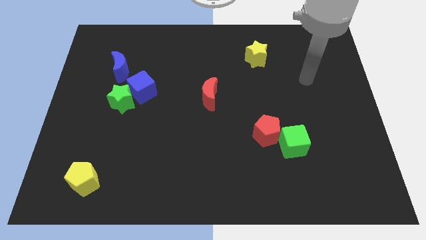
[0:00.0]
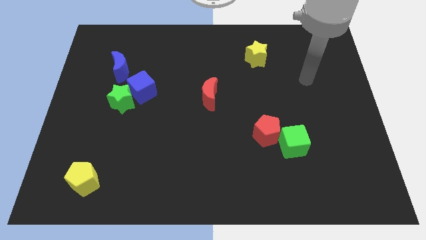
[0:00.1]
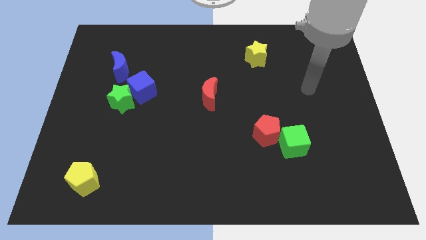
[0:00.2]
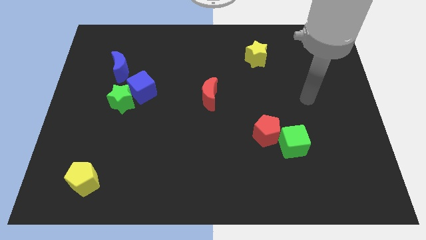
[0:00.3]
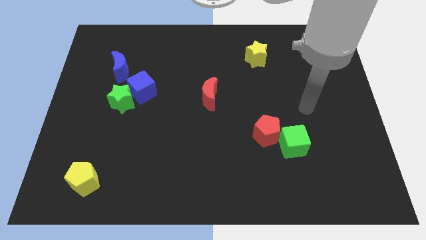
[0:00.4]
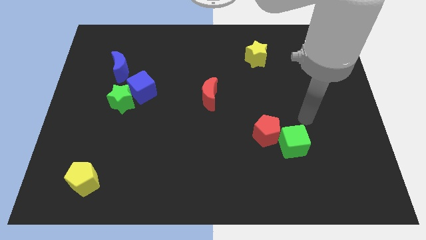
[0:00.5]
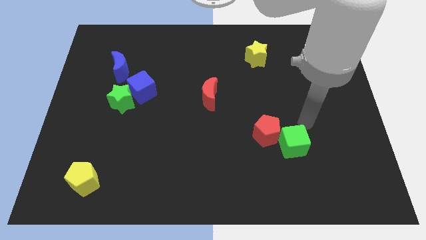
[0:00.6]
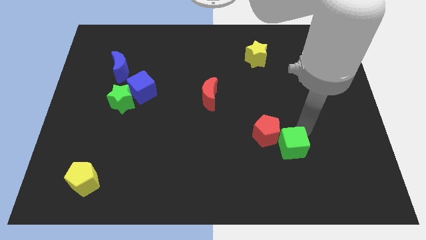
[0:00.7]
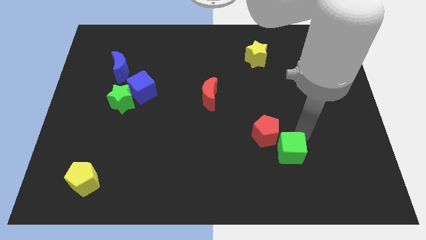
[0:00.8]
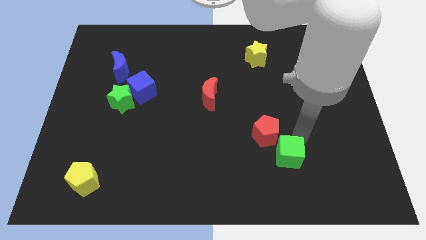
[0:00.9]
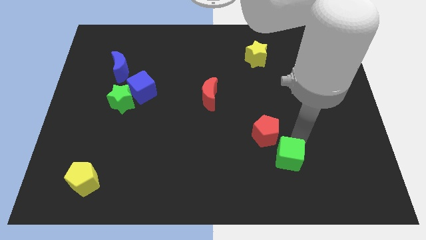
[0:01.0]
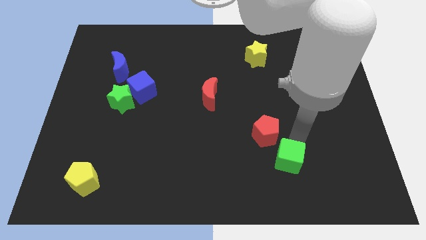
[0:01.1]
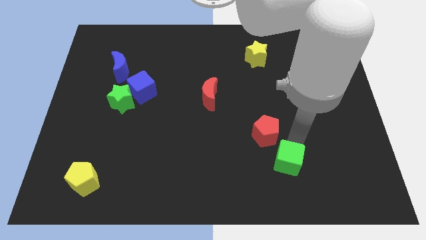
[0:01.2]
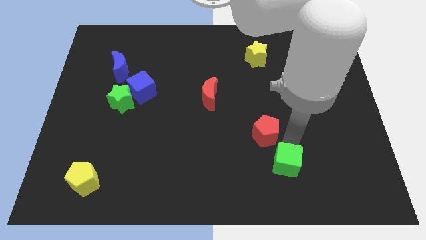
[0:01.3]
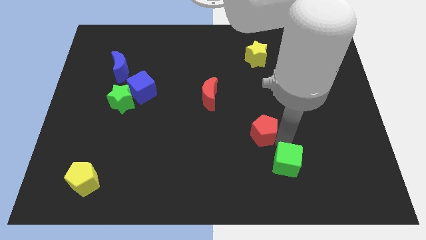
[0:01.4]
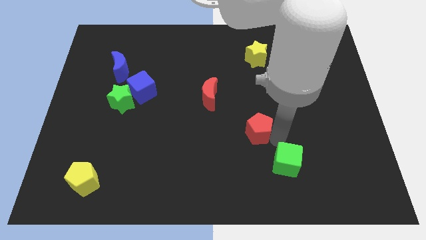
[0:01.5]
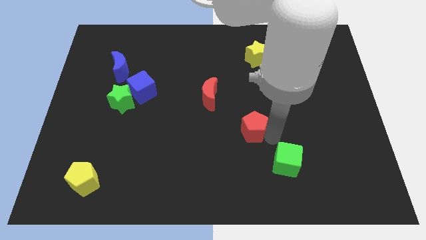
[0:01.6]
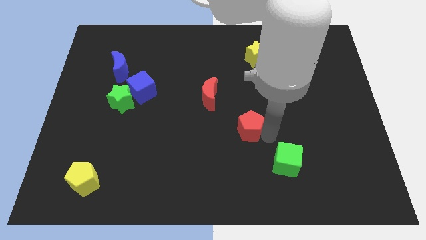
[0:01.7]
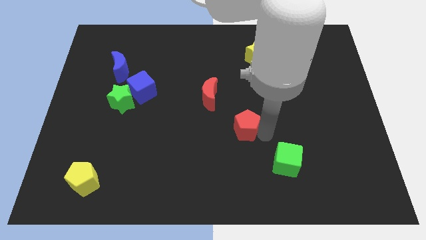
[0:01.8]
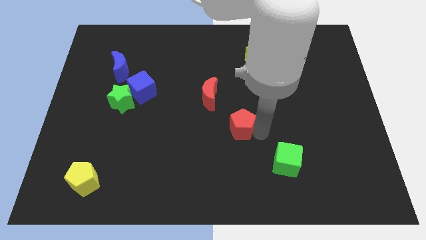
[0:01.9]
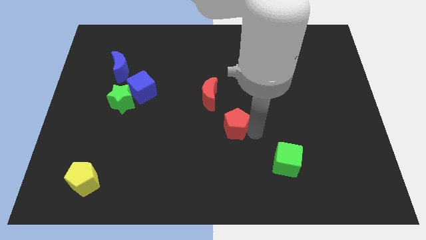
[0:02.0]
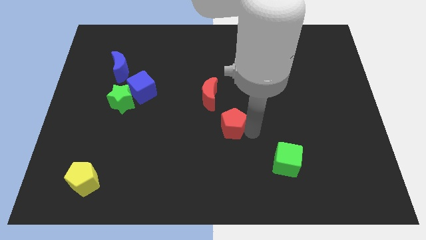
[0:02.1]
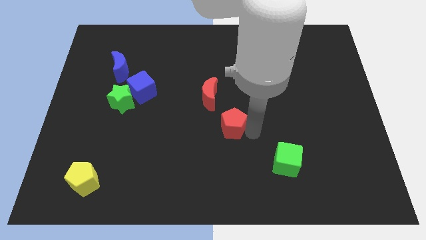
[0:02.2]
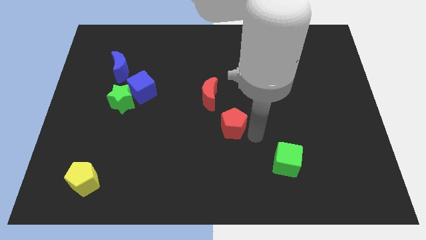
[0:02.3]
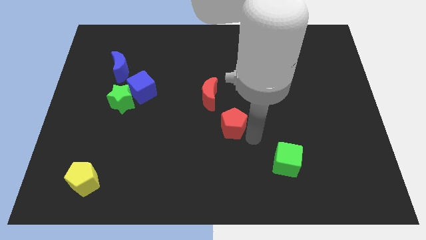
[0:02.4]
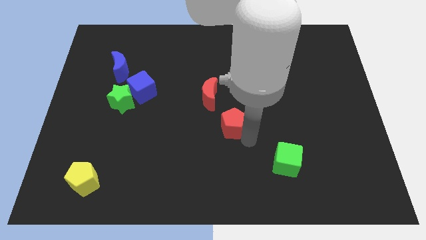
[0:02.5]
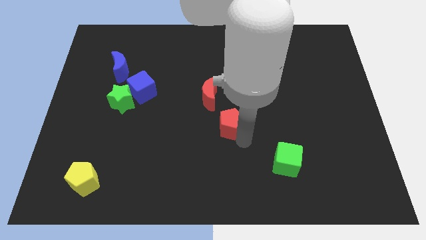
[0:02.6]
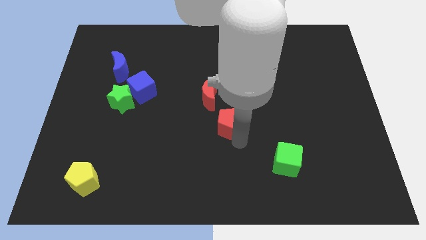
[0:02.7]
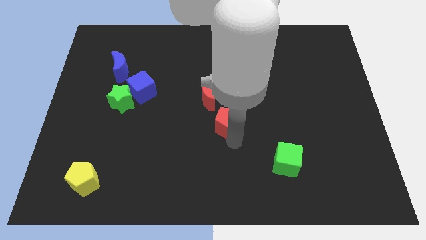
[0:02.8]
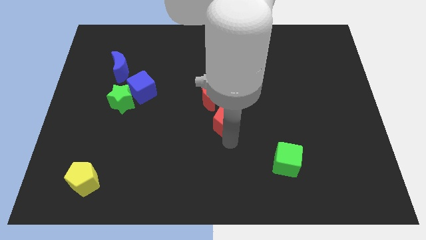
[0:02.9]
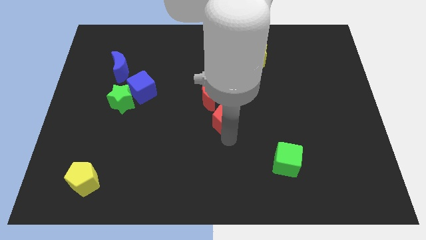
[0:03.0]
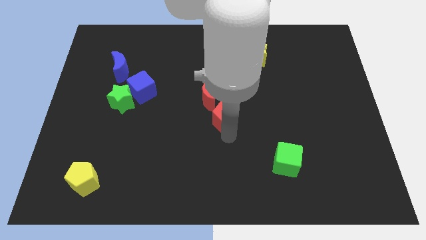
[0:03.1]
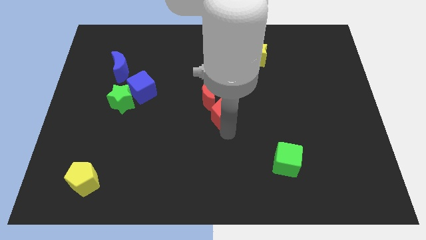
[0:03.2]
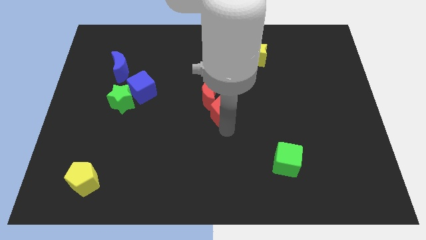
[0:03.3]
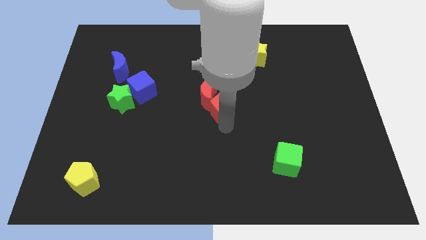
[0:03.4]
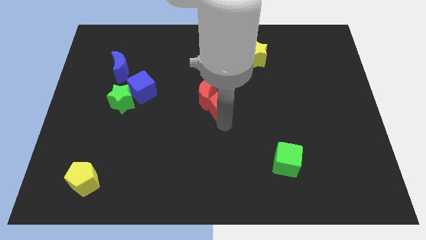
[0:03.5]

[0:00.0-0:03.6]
put the red pentagon close to the red moon

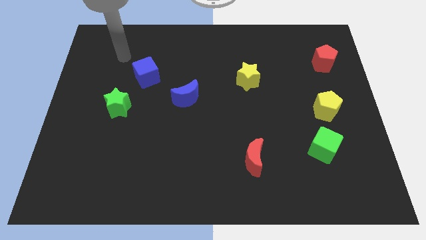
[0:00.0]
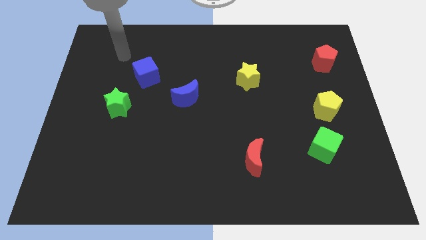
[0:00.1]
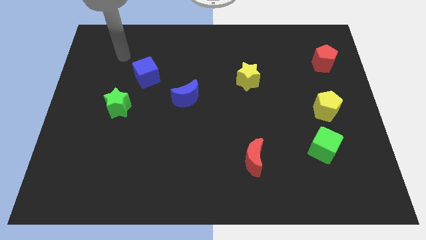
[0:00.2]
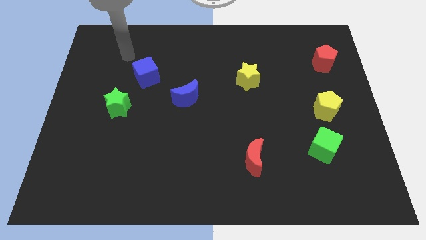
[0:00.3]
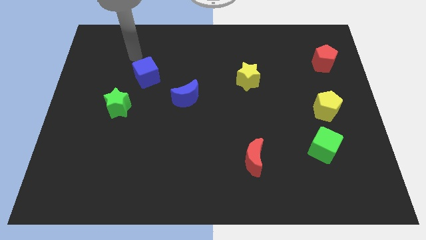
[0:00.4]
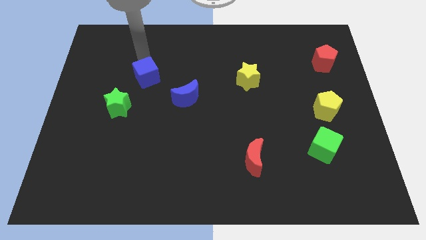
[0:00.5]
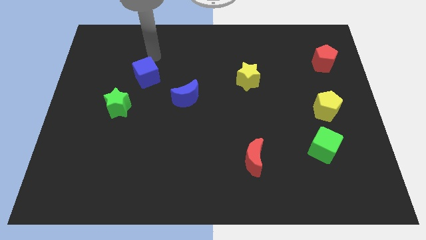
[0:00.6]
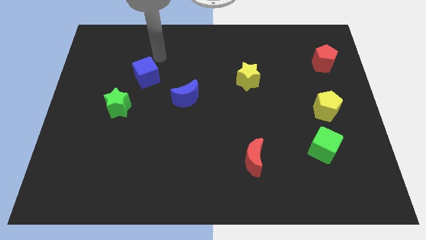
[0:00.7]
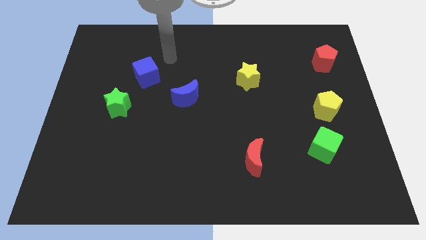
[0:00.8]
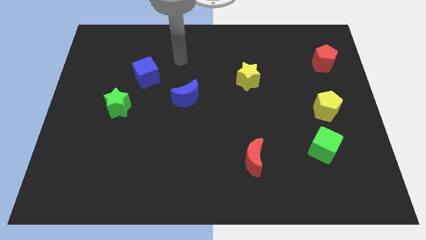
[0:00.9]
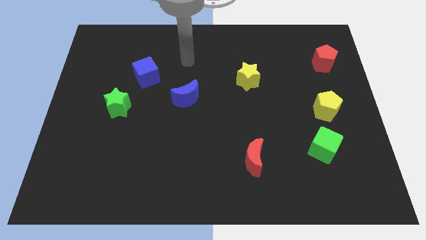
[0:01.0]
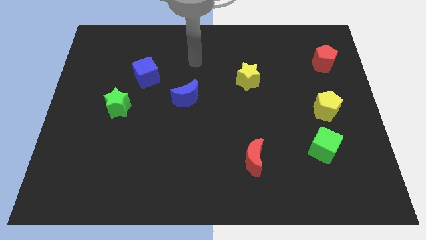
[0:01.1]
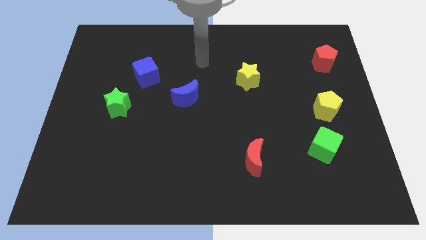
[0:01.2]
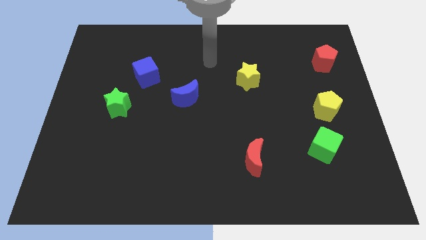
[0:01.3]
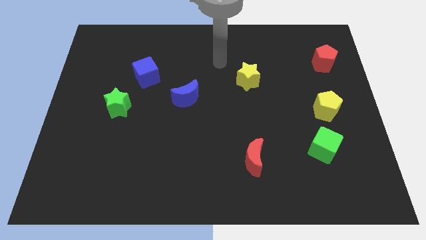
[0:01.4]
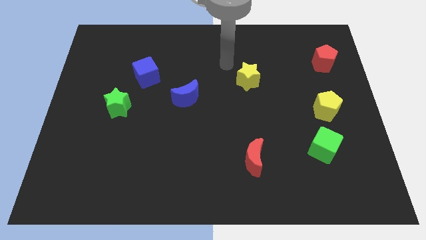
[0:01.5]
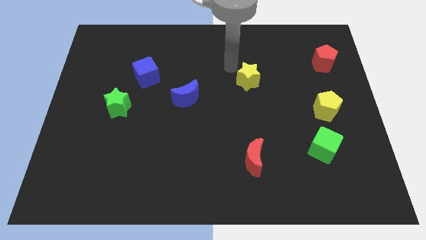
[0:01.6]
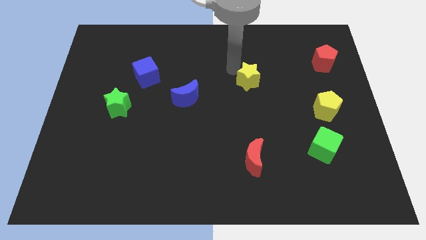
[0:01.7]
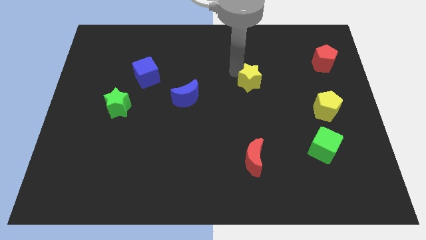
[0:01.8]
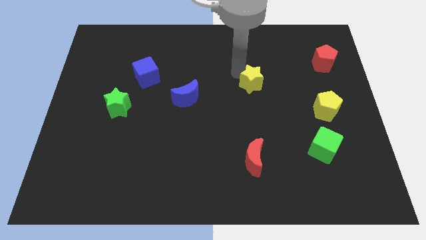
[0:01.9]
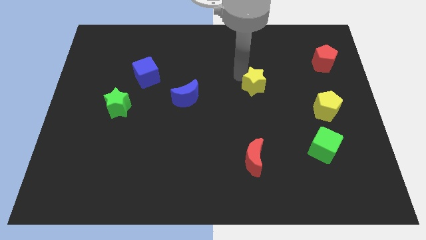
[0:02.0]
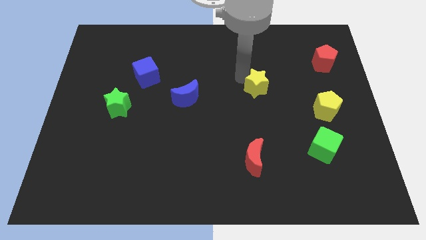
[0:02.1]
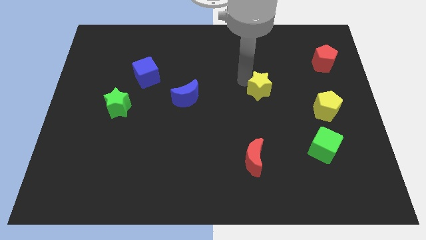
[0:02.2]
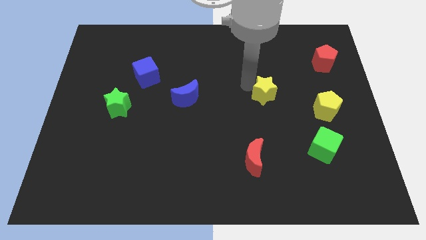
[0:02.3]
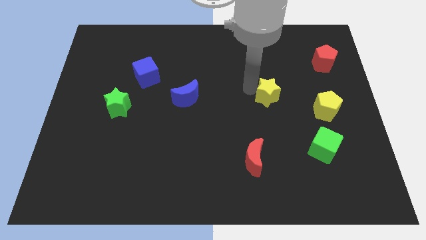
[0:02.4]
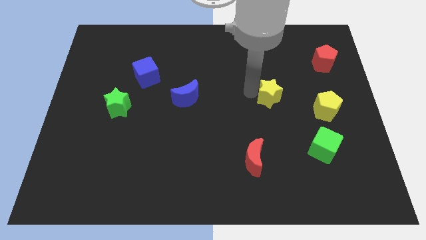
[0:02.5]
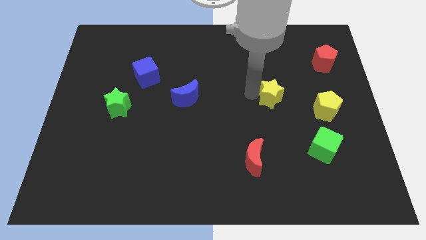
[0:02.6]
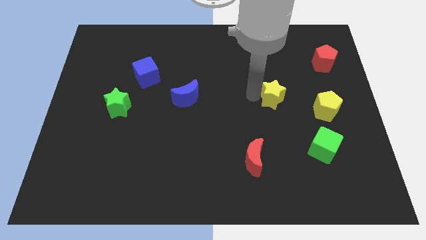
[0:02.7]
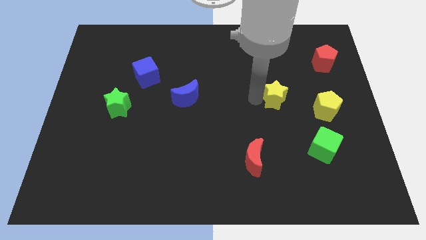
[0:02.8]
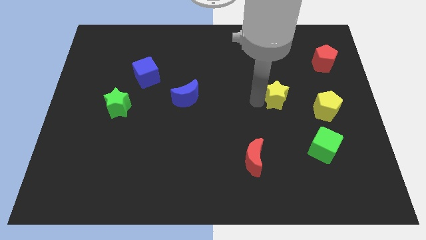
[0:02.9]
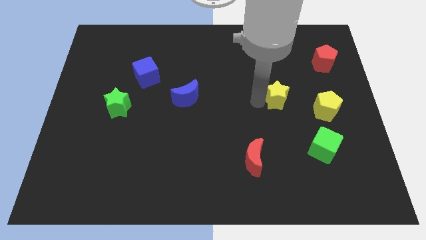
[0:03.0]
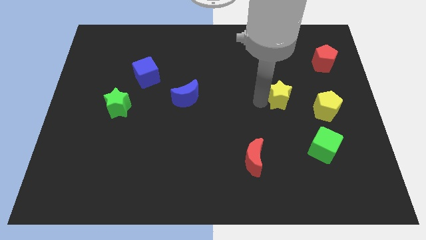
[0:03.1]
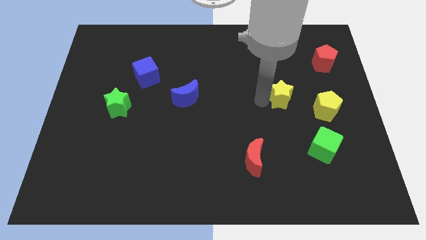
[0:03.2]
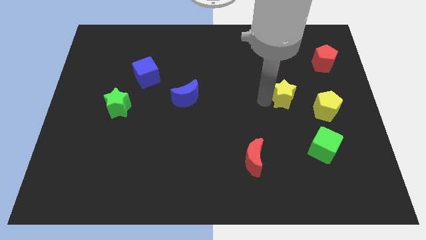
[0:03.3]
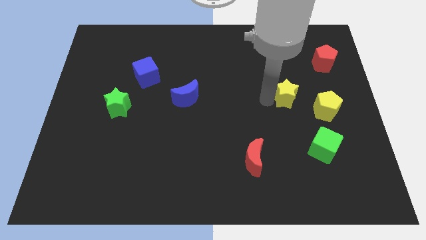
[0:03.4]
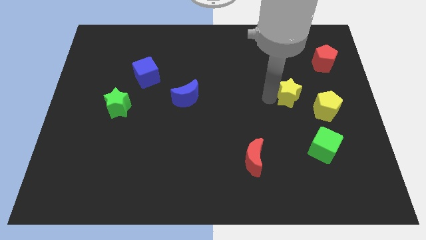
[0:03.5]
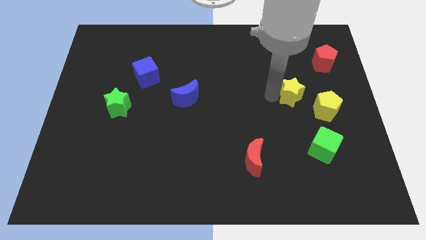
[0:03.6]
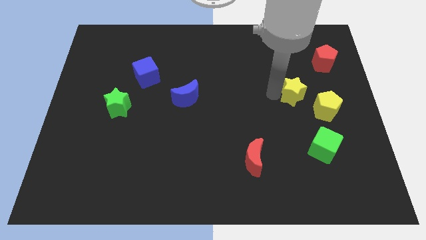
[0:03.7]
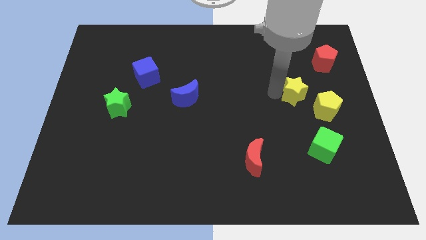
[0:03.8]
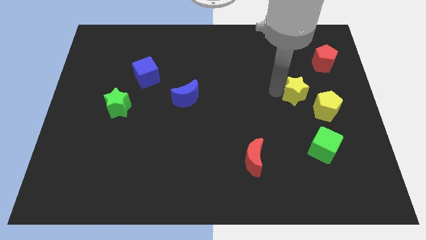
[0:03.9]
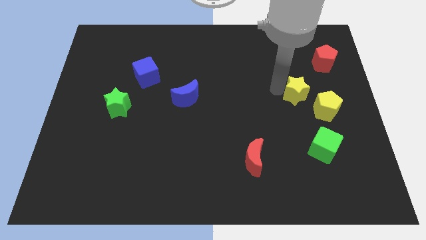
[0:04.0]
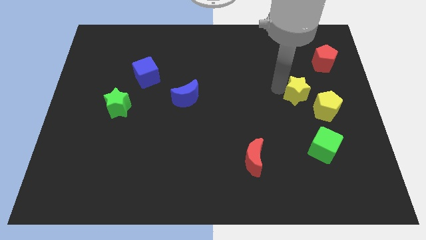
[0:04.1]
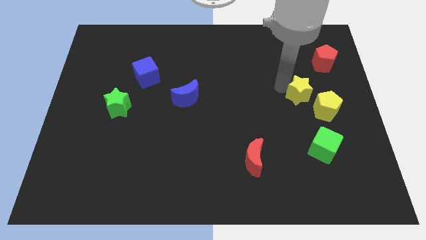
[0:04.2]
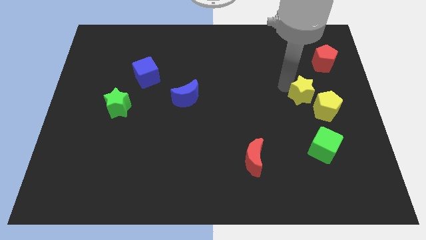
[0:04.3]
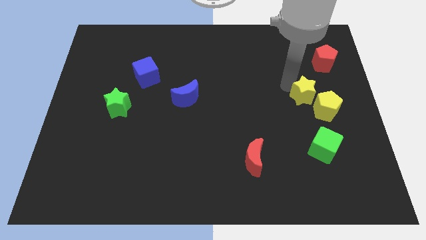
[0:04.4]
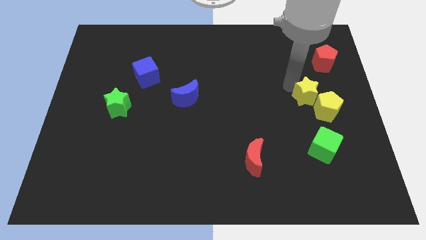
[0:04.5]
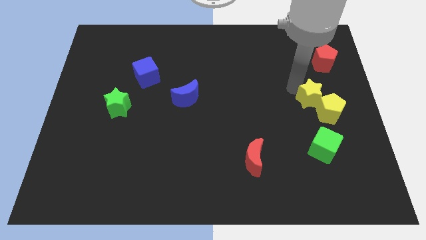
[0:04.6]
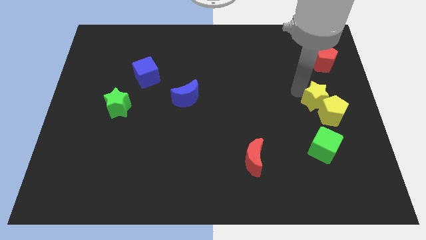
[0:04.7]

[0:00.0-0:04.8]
slide the yellow star close to the yellow pentagon
